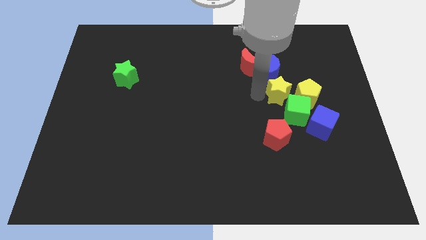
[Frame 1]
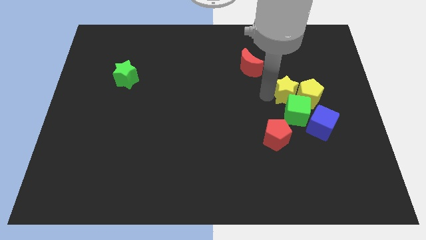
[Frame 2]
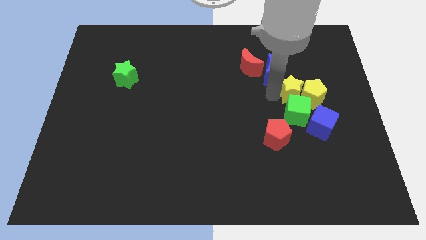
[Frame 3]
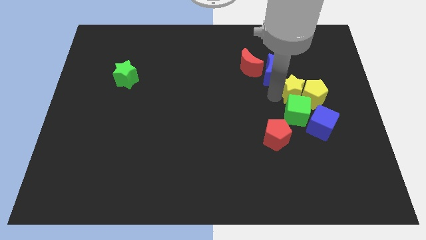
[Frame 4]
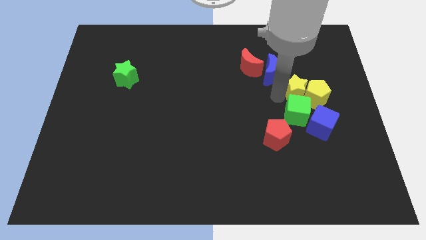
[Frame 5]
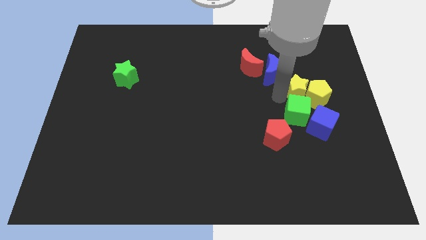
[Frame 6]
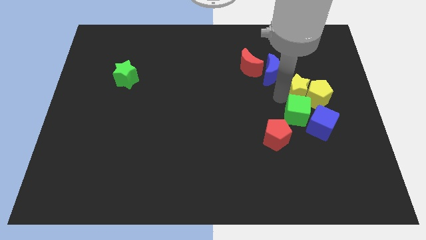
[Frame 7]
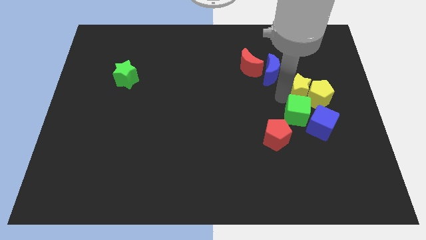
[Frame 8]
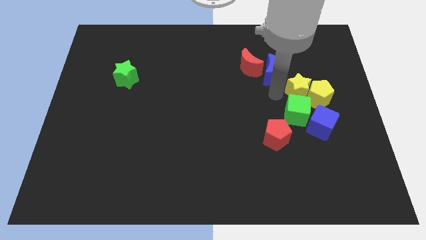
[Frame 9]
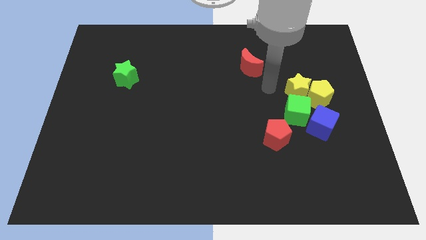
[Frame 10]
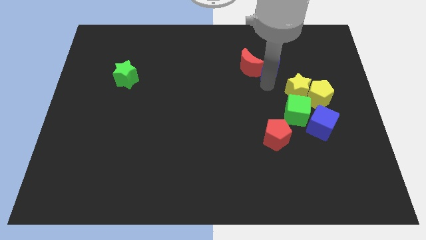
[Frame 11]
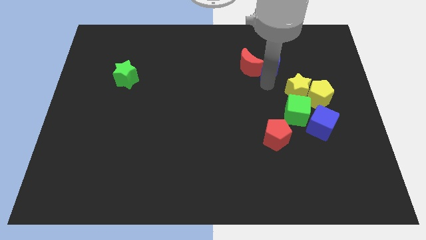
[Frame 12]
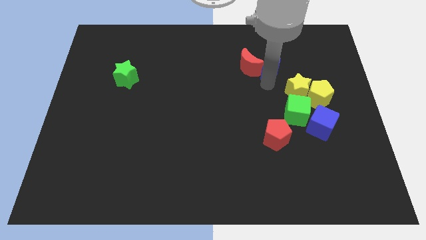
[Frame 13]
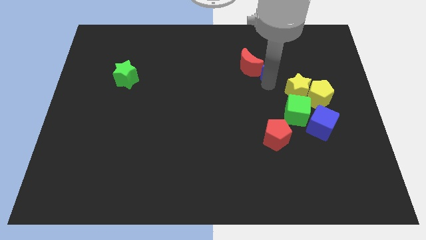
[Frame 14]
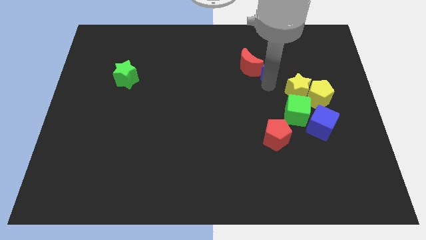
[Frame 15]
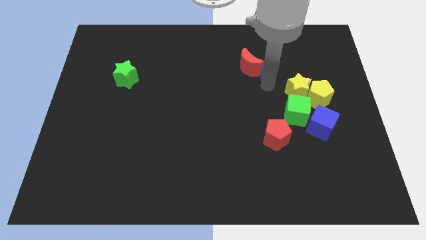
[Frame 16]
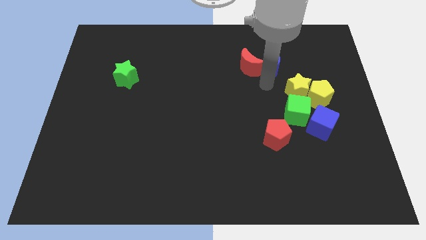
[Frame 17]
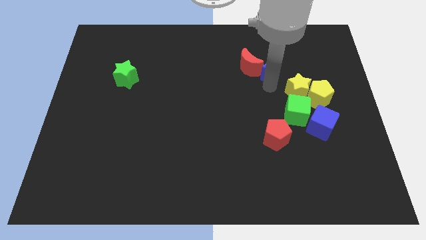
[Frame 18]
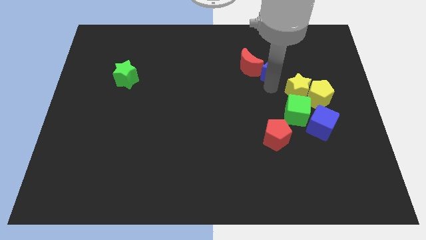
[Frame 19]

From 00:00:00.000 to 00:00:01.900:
put yellow star into yellow pentagon

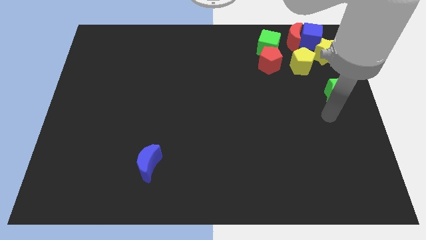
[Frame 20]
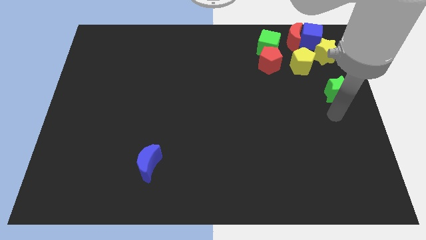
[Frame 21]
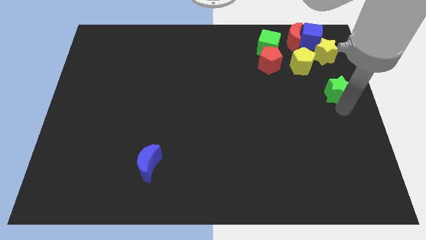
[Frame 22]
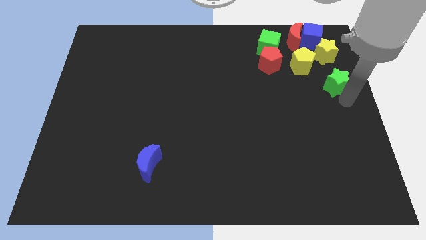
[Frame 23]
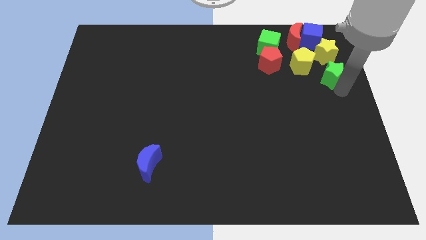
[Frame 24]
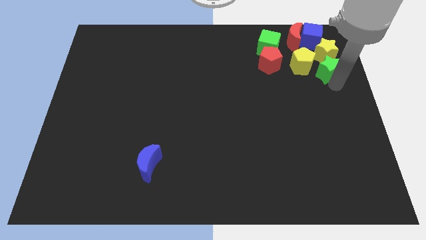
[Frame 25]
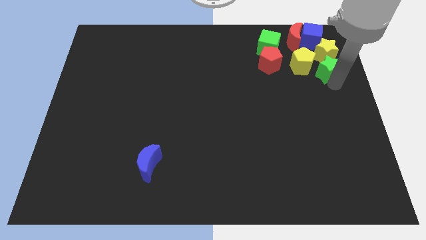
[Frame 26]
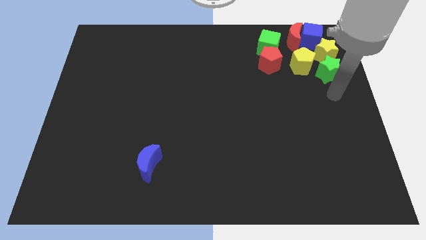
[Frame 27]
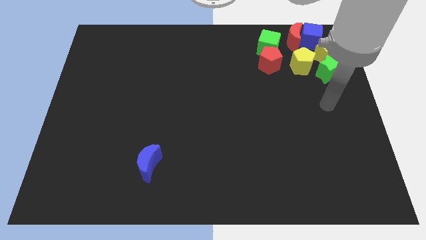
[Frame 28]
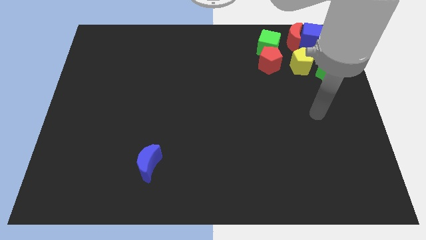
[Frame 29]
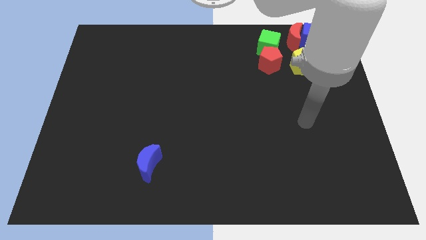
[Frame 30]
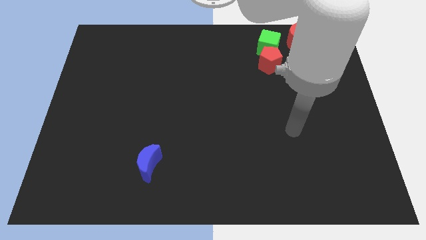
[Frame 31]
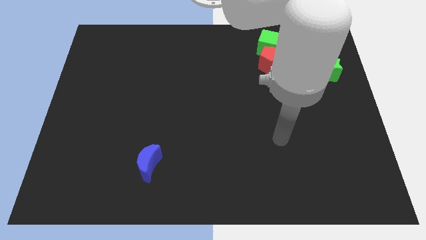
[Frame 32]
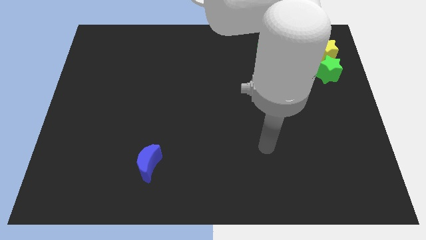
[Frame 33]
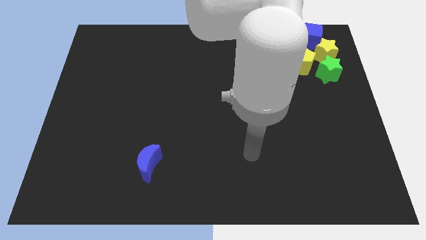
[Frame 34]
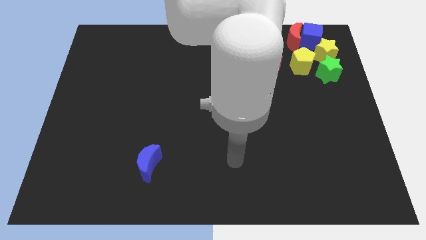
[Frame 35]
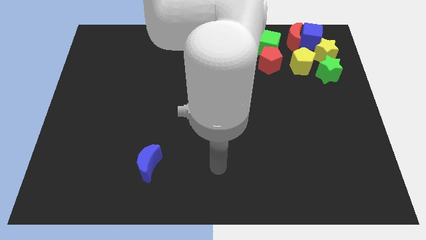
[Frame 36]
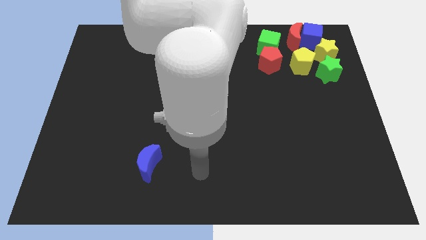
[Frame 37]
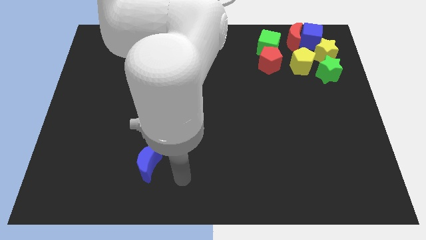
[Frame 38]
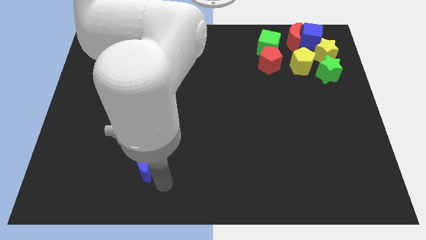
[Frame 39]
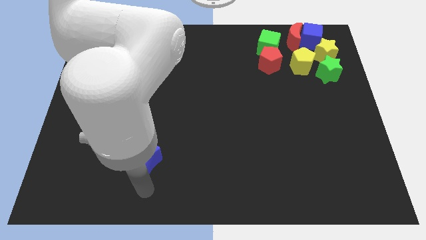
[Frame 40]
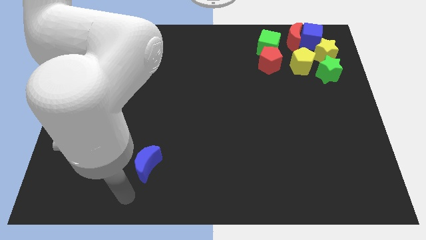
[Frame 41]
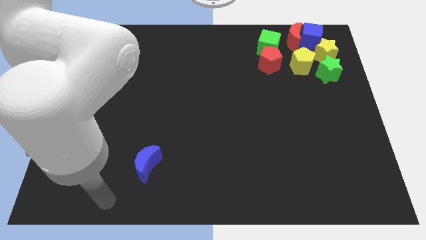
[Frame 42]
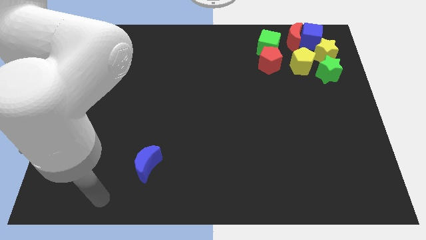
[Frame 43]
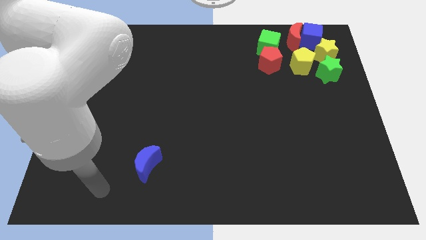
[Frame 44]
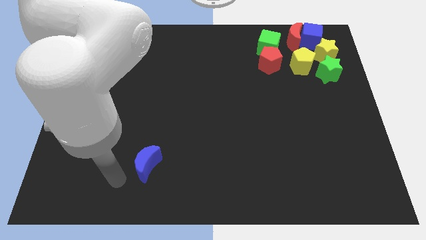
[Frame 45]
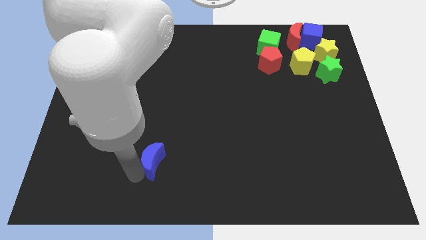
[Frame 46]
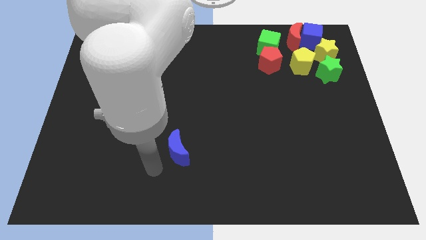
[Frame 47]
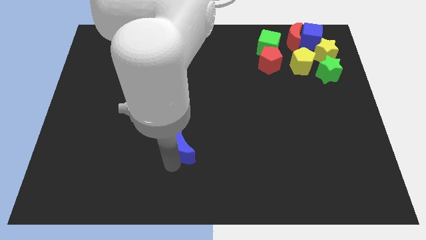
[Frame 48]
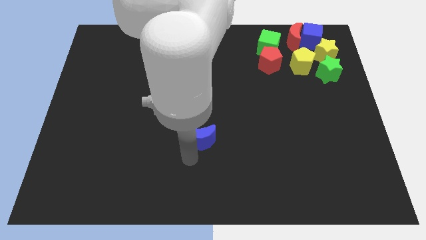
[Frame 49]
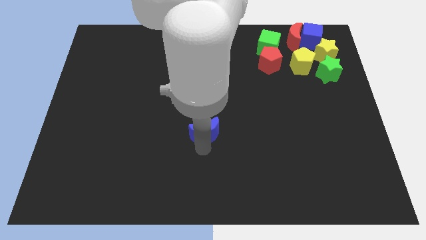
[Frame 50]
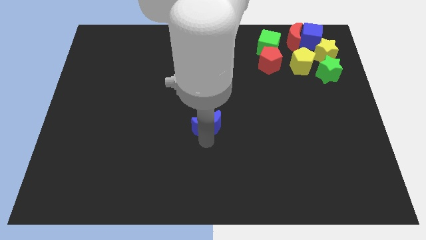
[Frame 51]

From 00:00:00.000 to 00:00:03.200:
place your arm to the blue moon

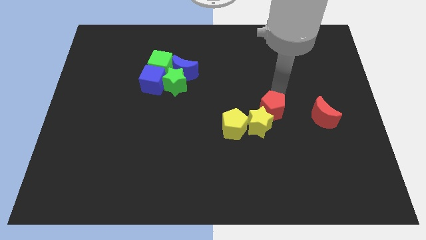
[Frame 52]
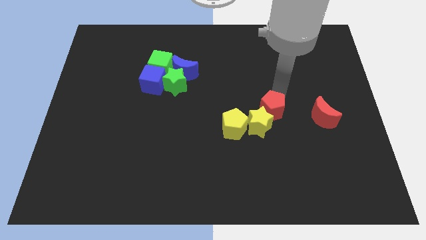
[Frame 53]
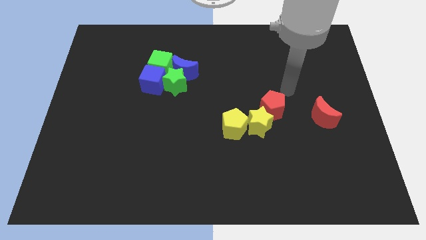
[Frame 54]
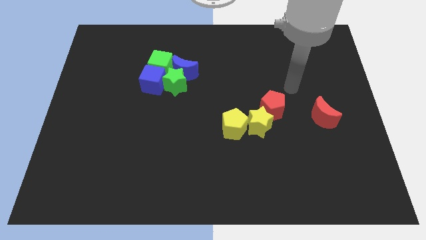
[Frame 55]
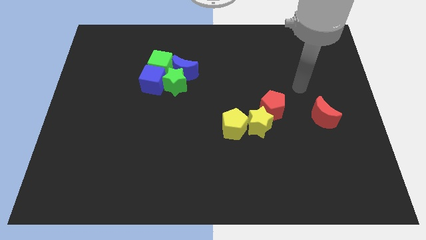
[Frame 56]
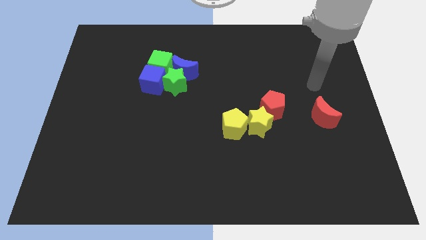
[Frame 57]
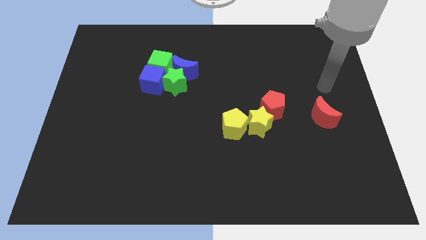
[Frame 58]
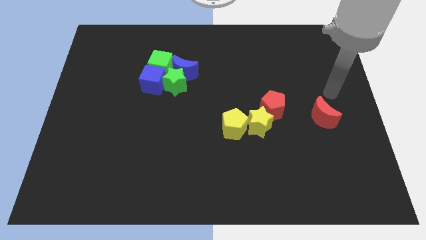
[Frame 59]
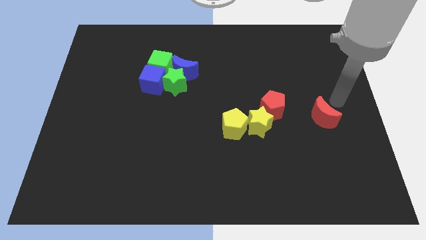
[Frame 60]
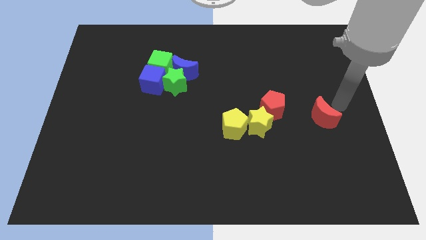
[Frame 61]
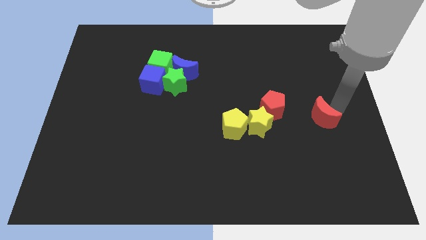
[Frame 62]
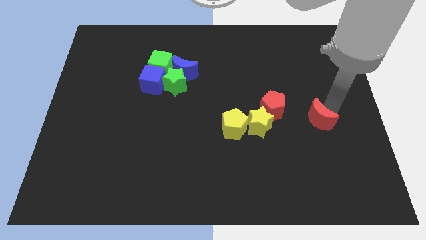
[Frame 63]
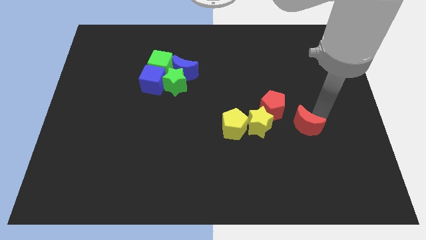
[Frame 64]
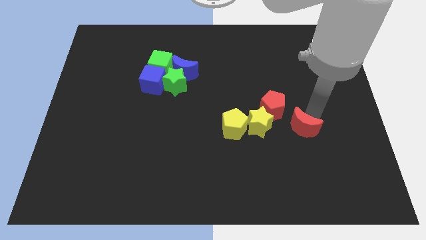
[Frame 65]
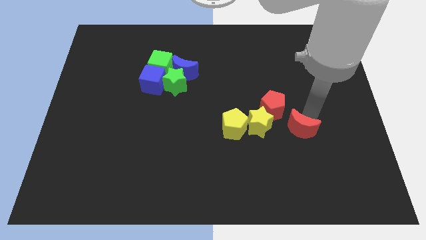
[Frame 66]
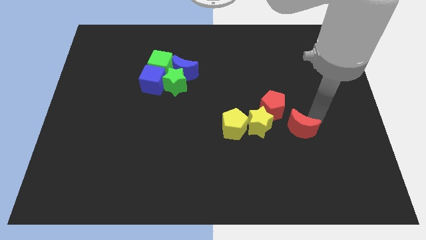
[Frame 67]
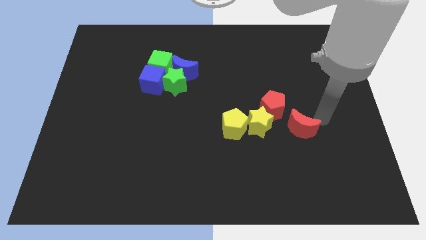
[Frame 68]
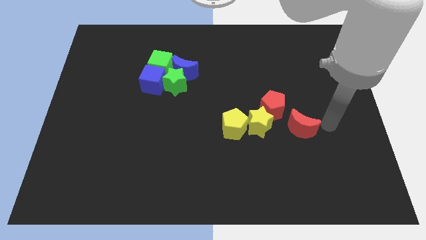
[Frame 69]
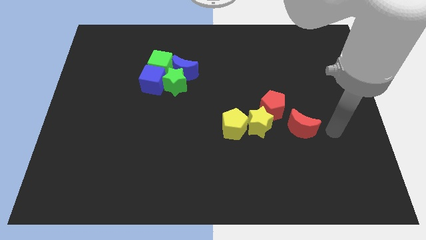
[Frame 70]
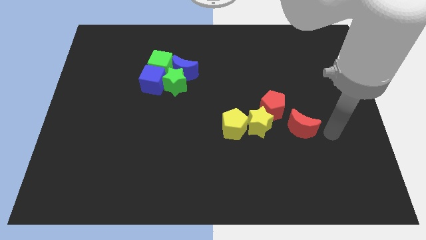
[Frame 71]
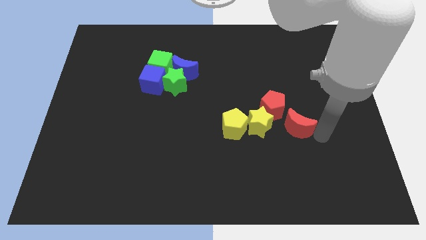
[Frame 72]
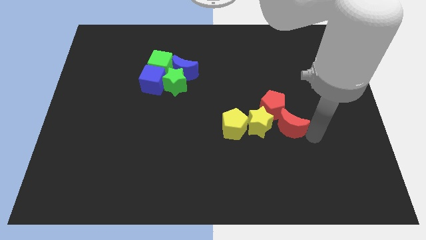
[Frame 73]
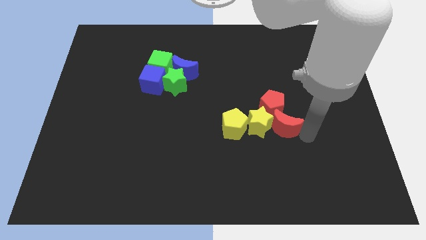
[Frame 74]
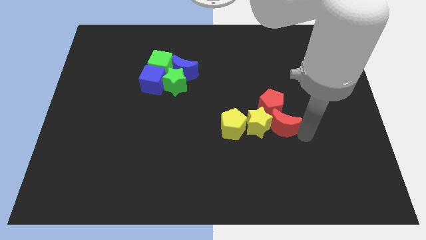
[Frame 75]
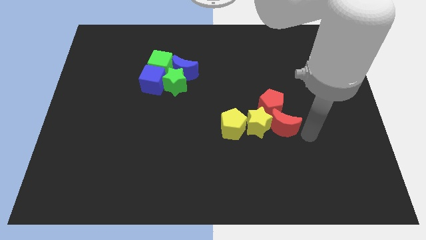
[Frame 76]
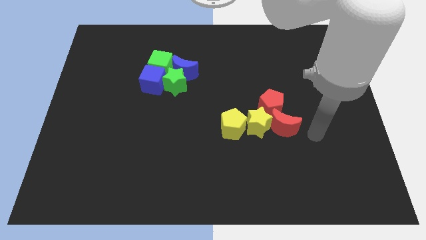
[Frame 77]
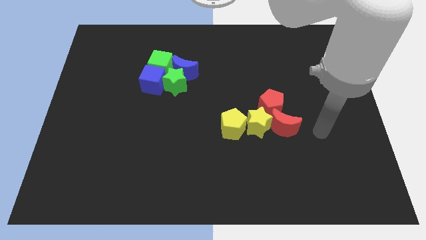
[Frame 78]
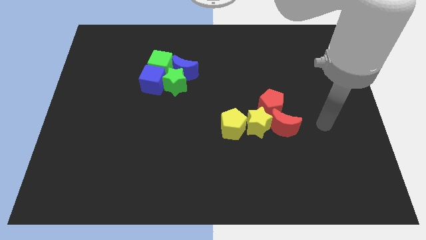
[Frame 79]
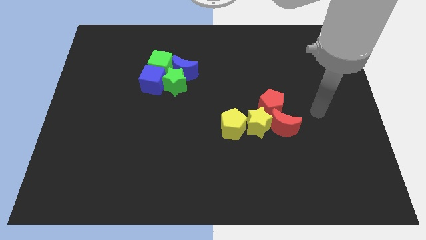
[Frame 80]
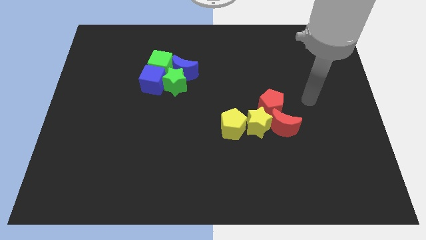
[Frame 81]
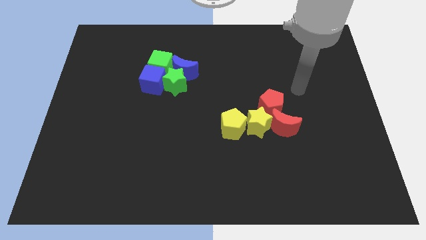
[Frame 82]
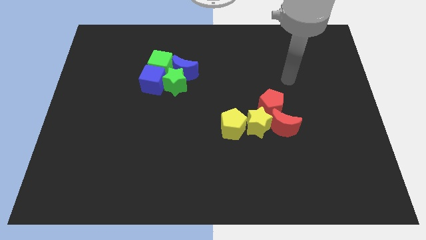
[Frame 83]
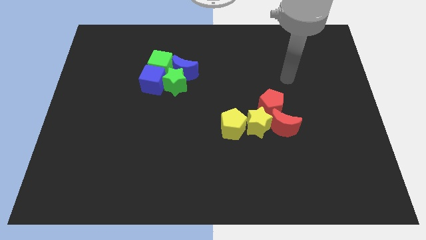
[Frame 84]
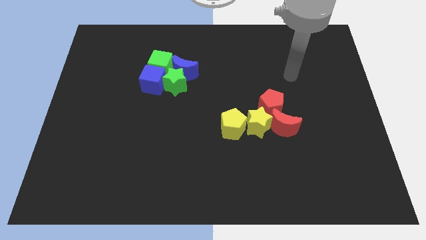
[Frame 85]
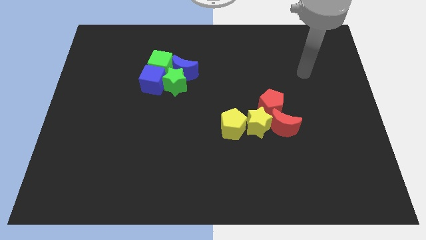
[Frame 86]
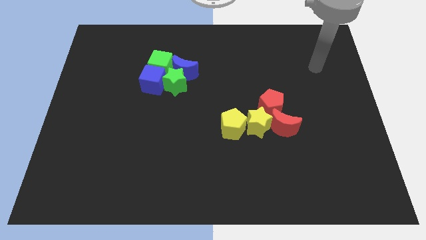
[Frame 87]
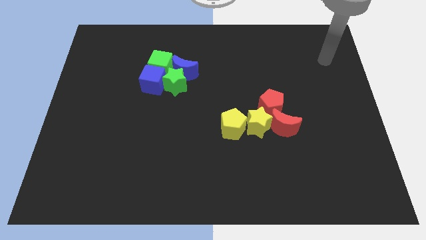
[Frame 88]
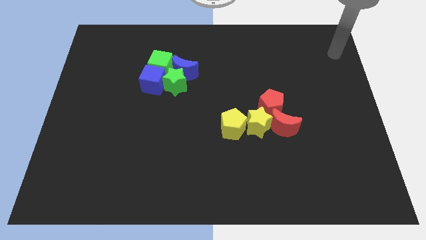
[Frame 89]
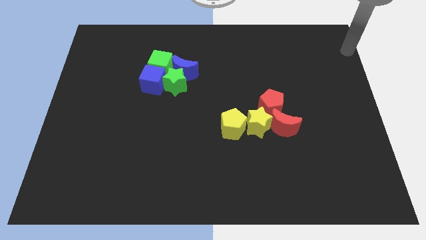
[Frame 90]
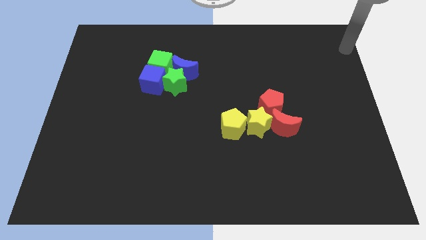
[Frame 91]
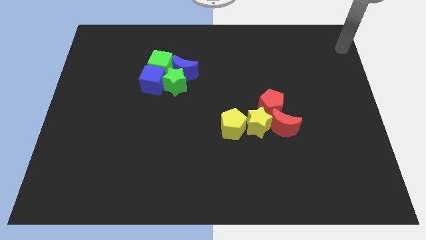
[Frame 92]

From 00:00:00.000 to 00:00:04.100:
push the red moon into the yellow star
